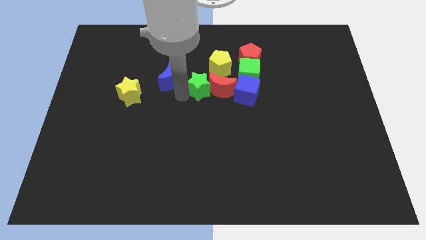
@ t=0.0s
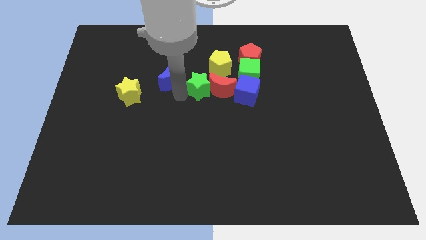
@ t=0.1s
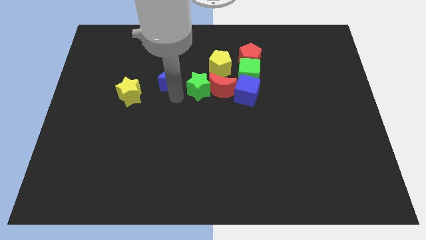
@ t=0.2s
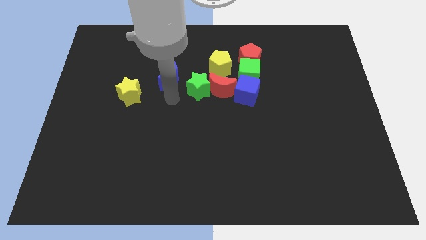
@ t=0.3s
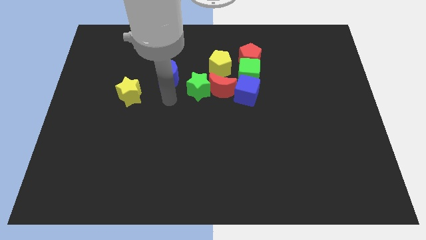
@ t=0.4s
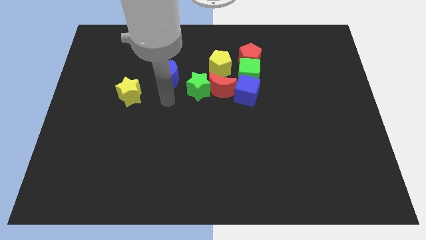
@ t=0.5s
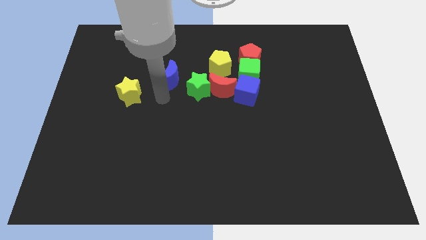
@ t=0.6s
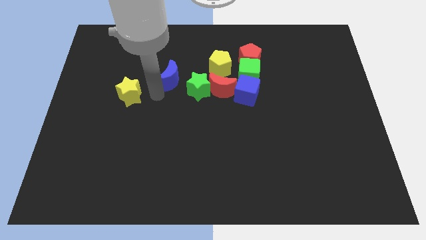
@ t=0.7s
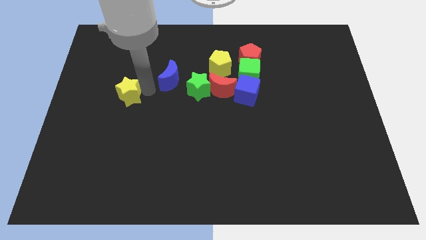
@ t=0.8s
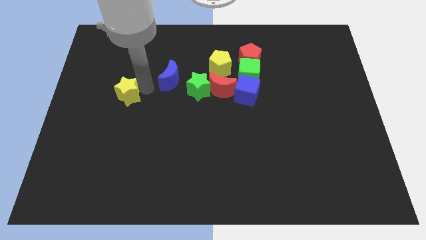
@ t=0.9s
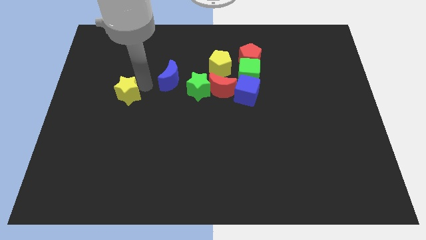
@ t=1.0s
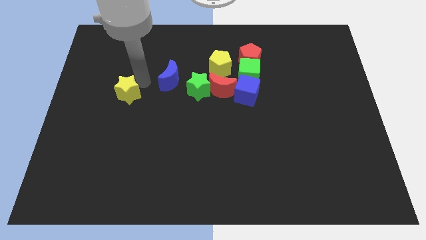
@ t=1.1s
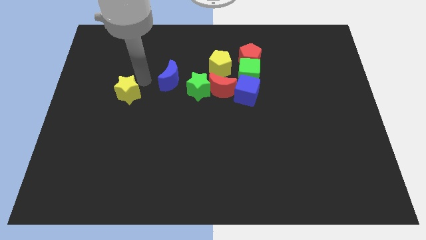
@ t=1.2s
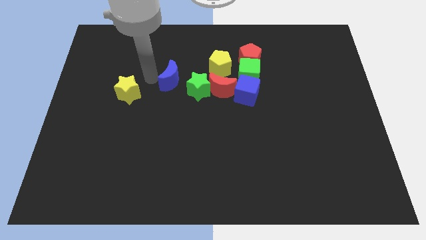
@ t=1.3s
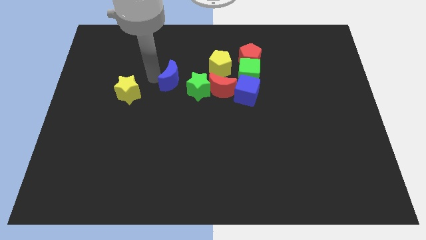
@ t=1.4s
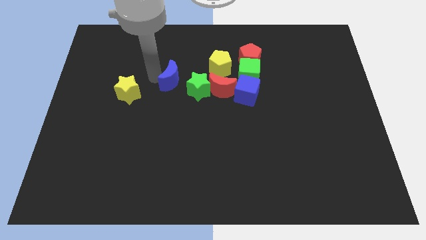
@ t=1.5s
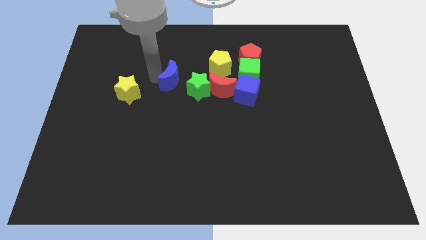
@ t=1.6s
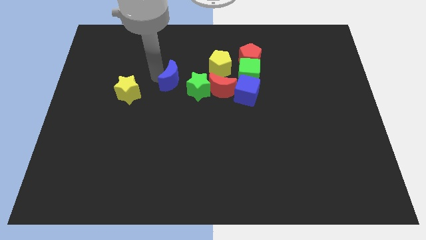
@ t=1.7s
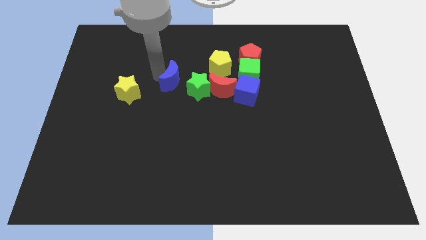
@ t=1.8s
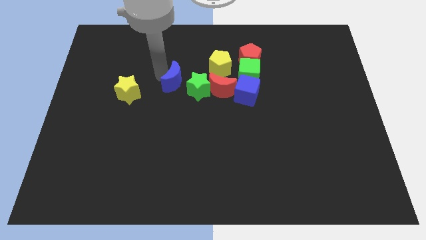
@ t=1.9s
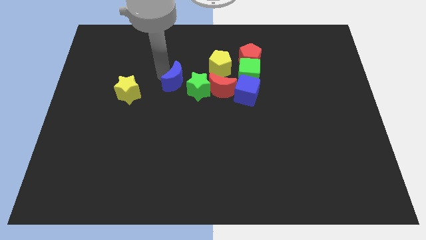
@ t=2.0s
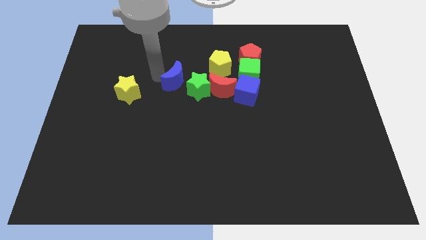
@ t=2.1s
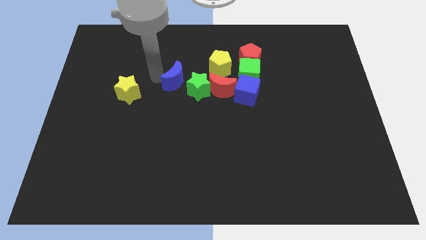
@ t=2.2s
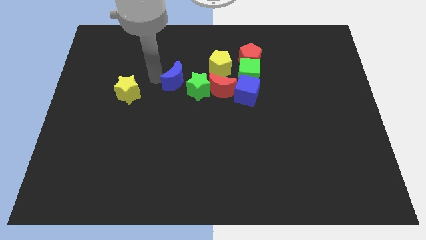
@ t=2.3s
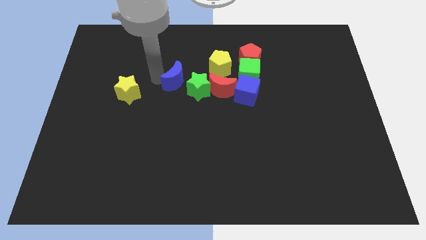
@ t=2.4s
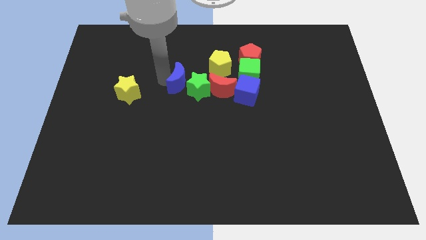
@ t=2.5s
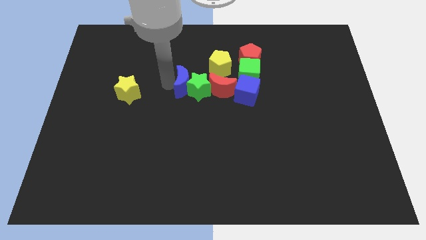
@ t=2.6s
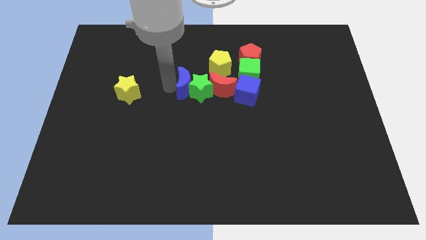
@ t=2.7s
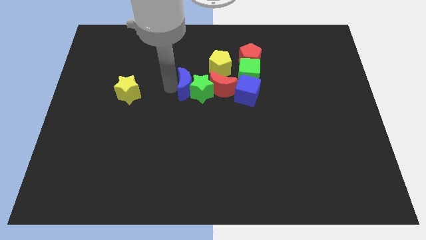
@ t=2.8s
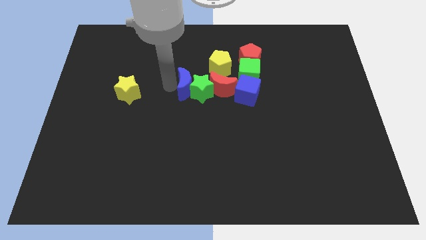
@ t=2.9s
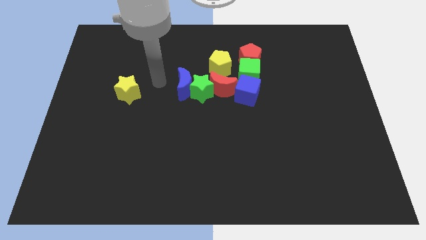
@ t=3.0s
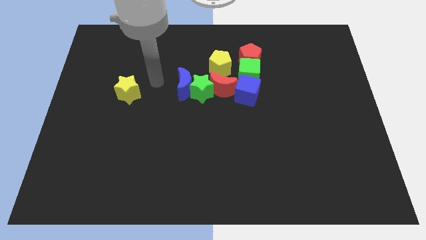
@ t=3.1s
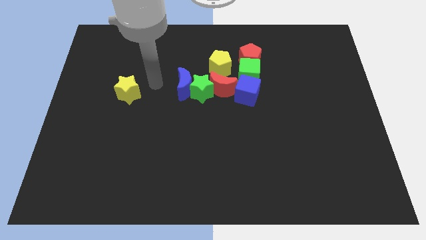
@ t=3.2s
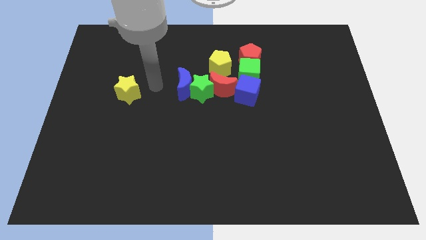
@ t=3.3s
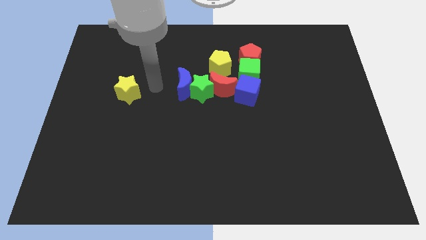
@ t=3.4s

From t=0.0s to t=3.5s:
push the blue moon into the group of blocks

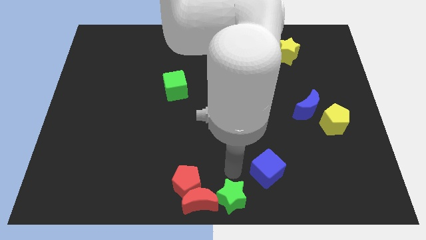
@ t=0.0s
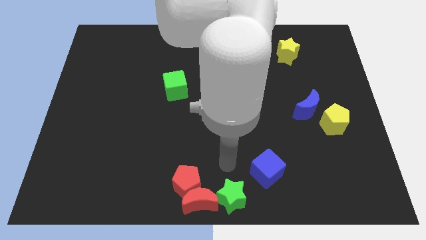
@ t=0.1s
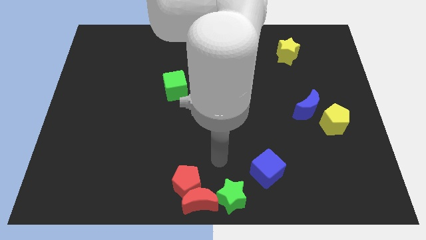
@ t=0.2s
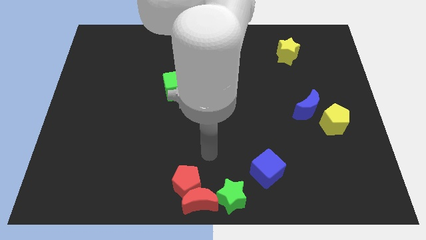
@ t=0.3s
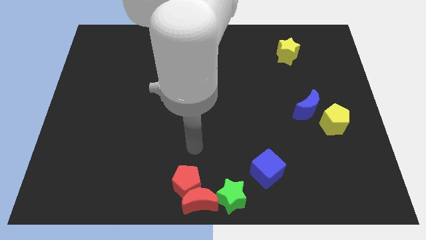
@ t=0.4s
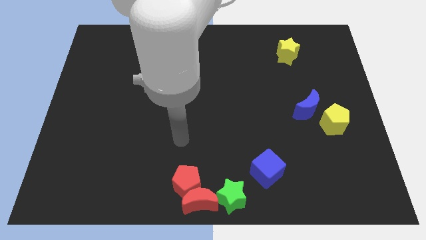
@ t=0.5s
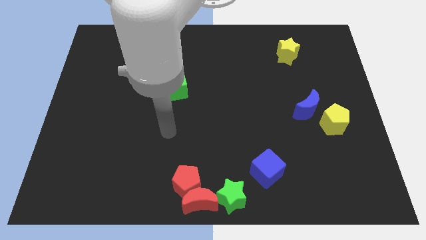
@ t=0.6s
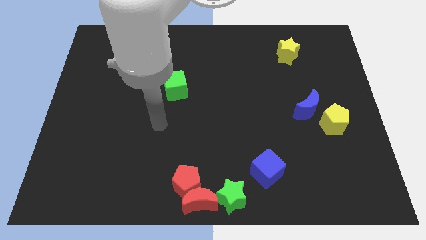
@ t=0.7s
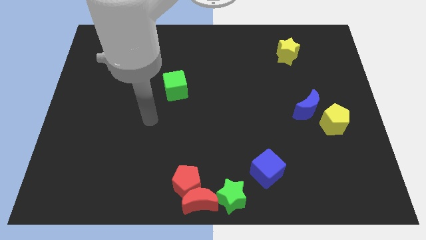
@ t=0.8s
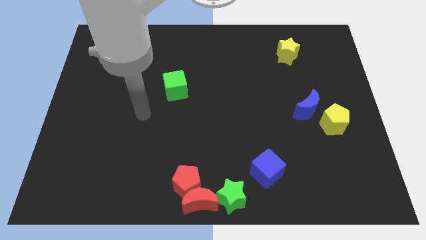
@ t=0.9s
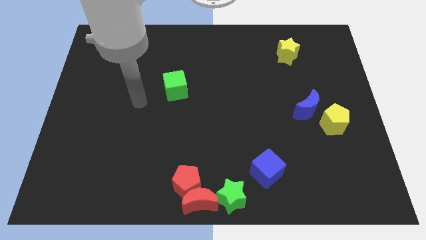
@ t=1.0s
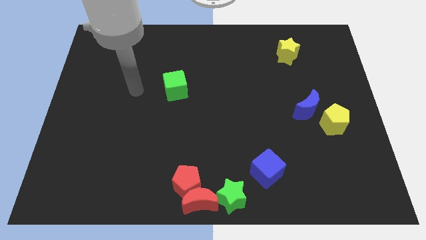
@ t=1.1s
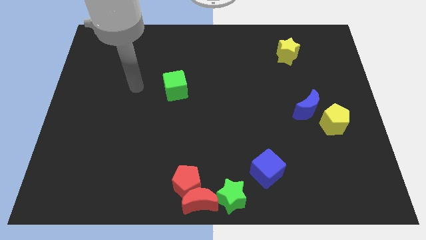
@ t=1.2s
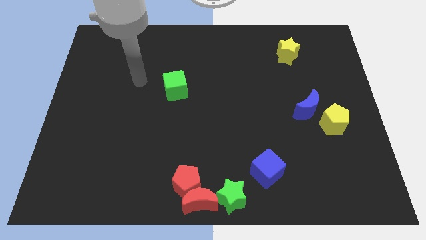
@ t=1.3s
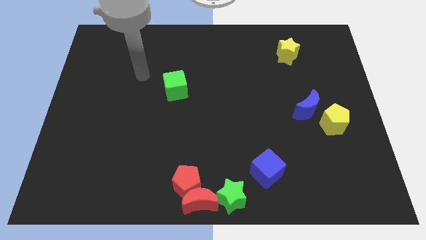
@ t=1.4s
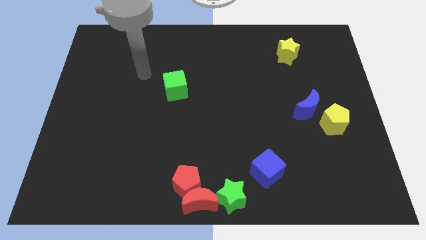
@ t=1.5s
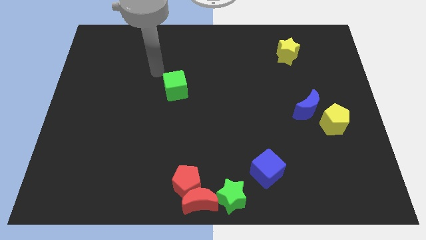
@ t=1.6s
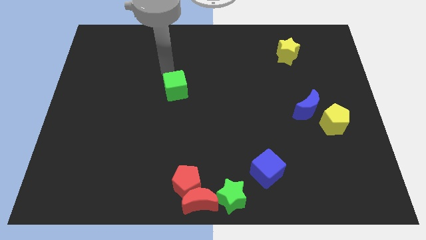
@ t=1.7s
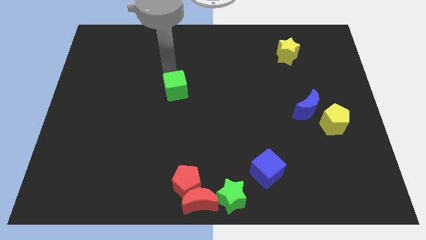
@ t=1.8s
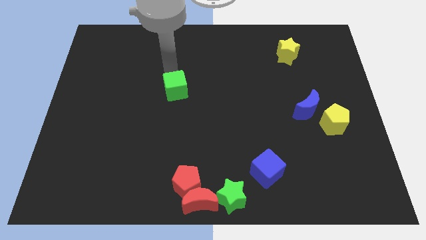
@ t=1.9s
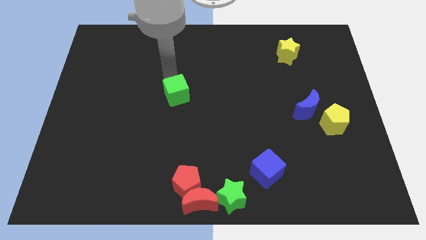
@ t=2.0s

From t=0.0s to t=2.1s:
tap the green cube on top

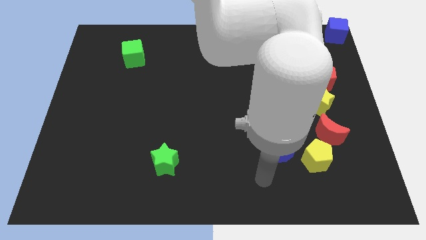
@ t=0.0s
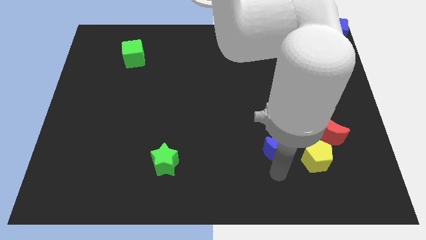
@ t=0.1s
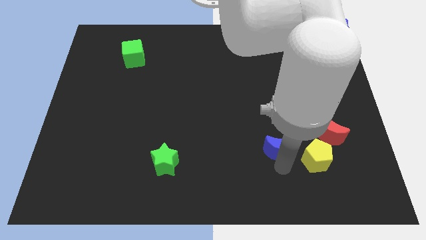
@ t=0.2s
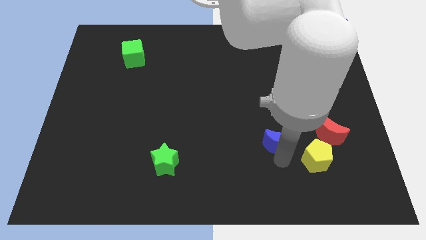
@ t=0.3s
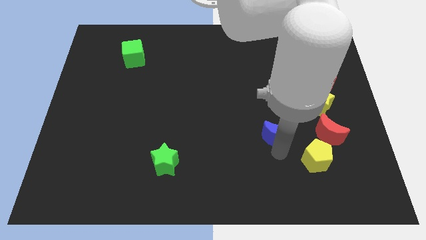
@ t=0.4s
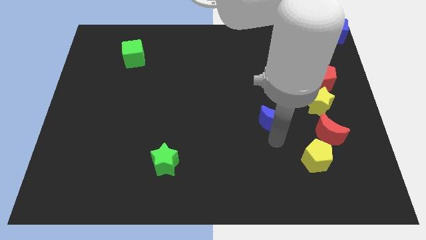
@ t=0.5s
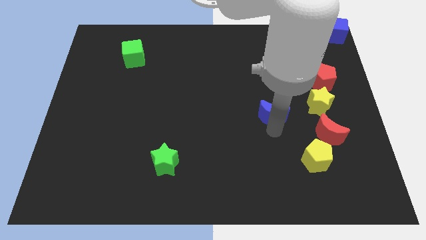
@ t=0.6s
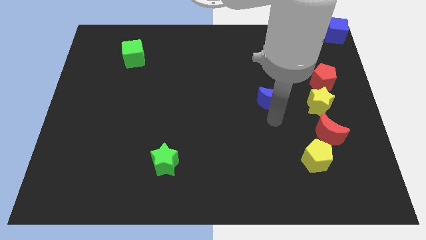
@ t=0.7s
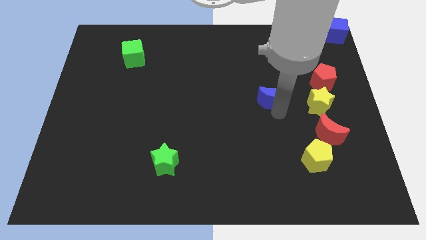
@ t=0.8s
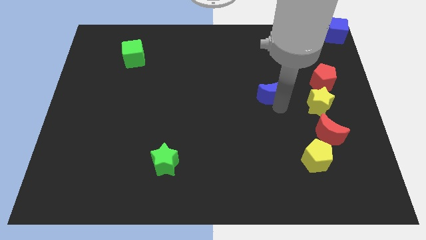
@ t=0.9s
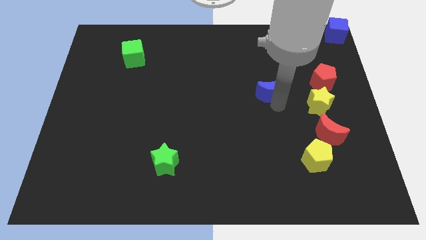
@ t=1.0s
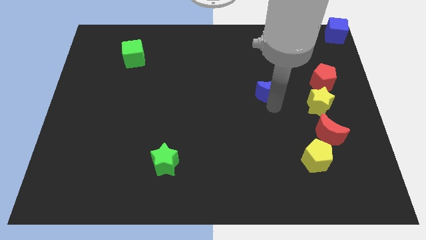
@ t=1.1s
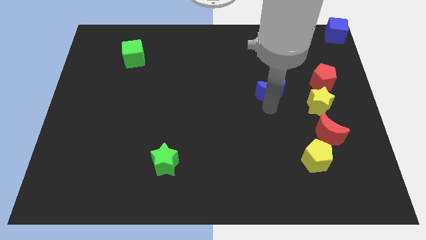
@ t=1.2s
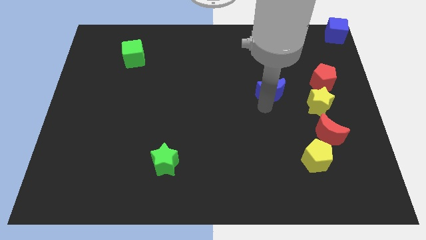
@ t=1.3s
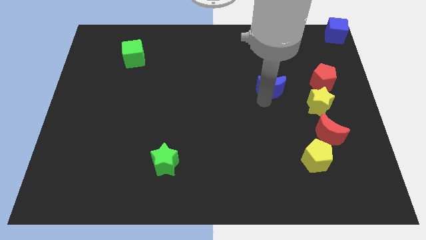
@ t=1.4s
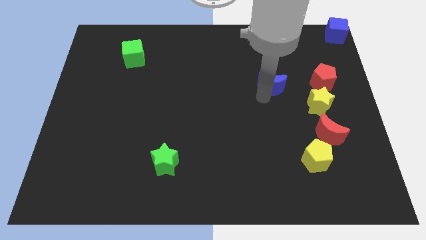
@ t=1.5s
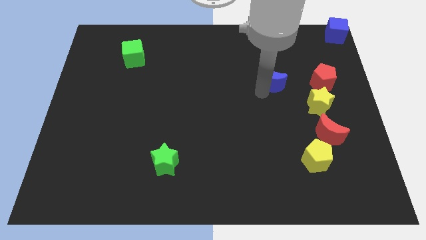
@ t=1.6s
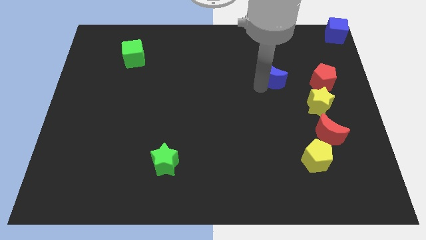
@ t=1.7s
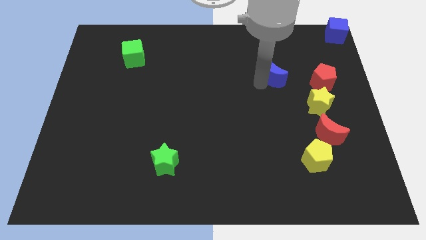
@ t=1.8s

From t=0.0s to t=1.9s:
place the blue crescent to the left of the red pentagon

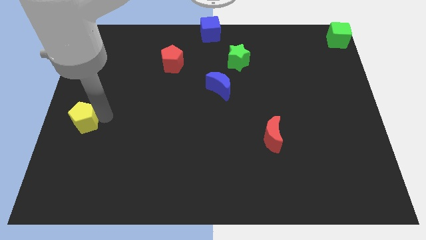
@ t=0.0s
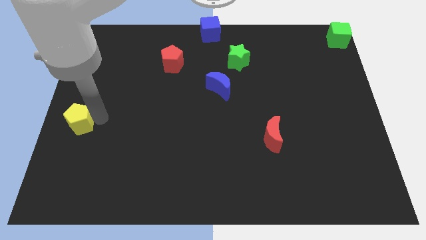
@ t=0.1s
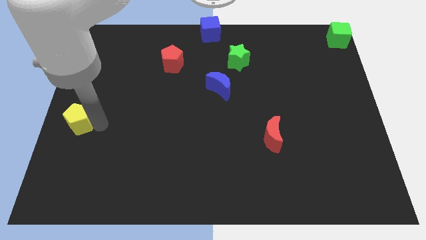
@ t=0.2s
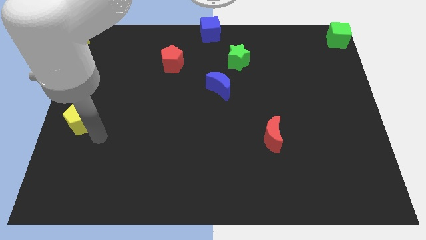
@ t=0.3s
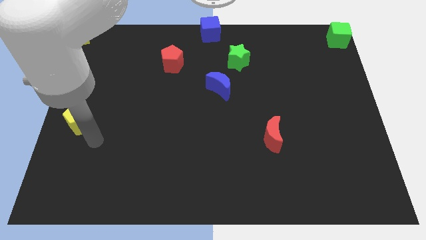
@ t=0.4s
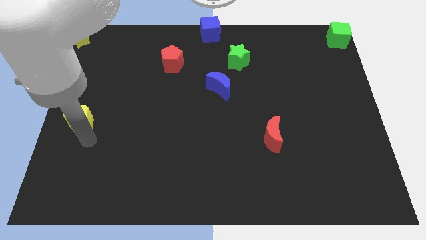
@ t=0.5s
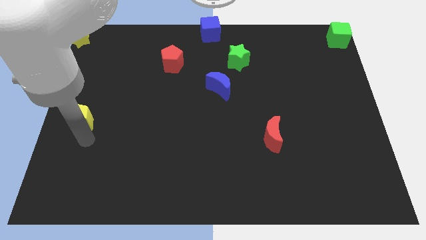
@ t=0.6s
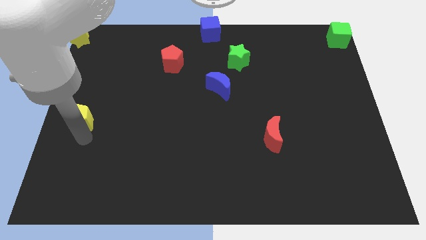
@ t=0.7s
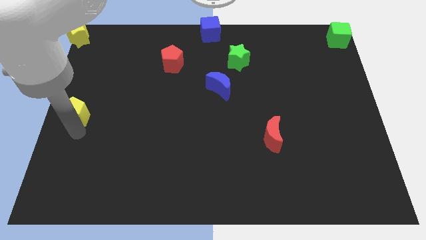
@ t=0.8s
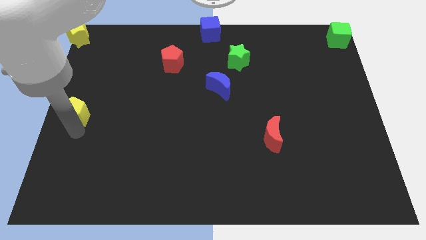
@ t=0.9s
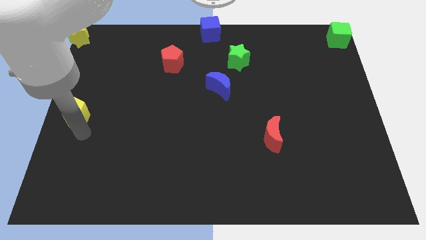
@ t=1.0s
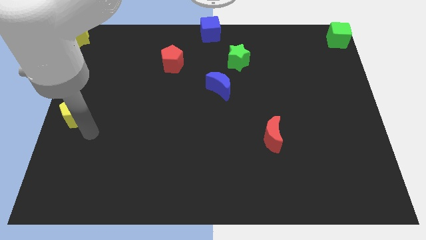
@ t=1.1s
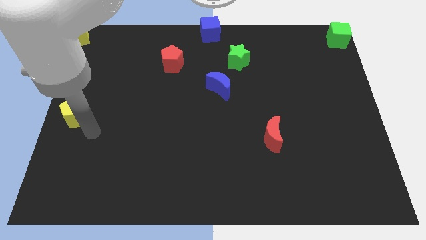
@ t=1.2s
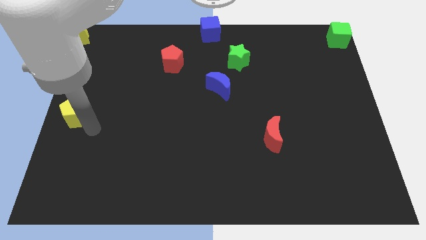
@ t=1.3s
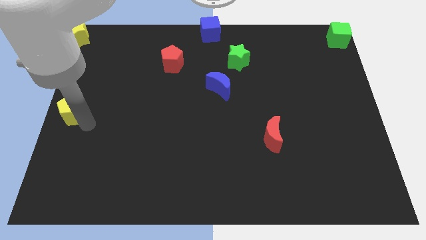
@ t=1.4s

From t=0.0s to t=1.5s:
put the yellow pentagon at the center left of the board
